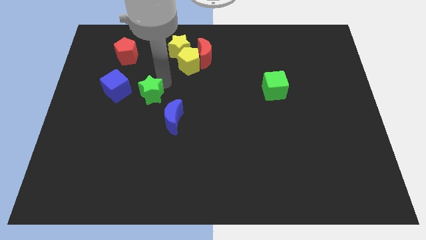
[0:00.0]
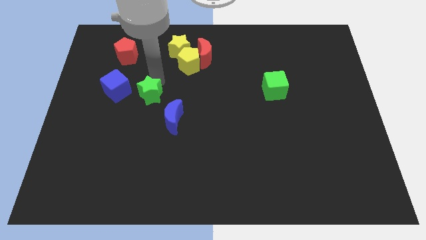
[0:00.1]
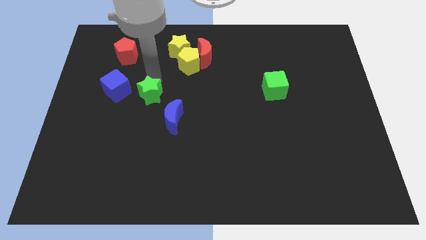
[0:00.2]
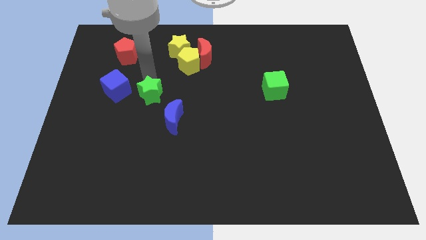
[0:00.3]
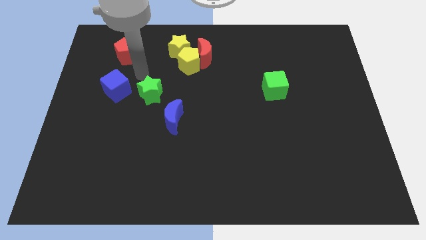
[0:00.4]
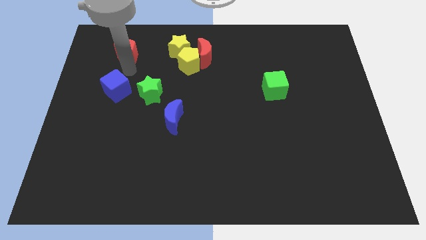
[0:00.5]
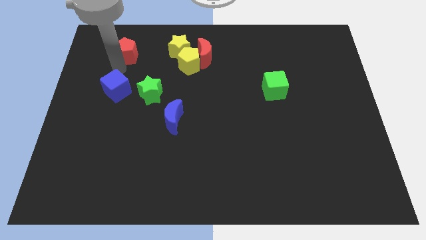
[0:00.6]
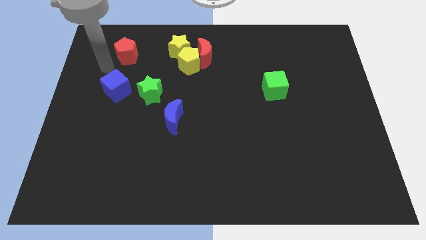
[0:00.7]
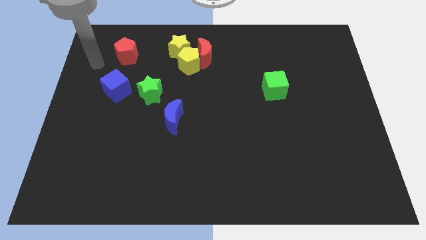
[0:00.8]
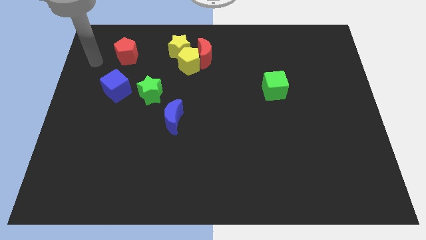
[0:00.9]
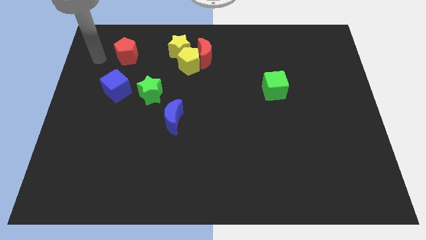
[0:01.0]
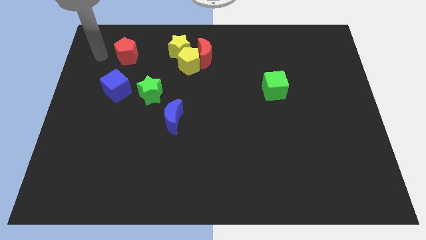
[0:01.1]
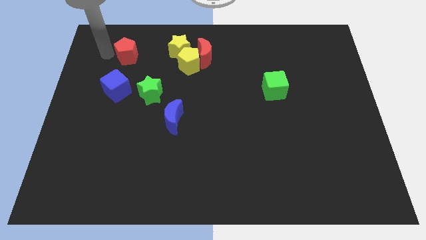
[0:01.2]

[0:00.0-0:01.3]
move your arm left to the red pentagon

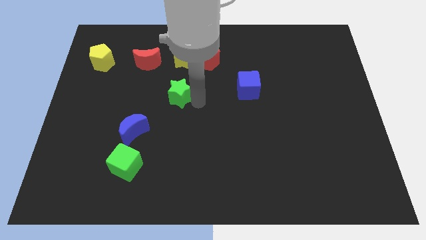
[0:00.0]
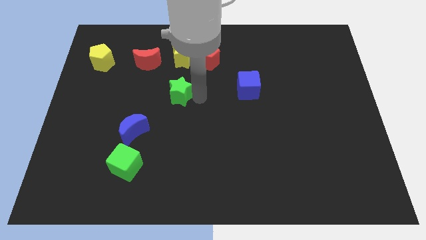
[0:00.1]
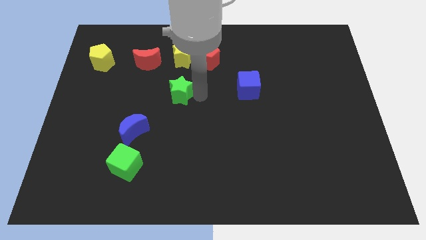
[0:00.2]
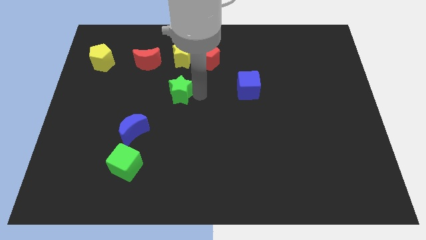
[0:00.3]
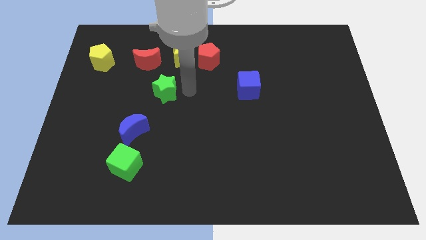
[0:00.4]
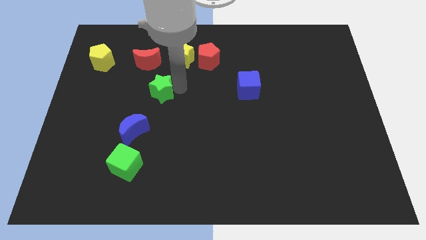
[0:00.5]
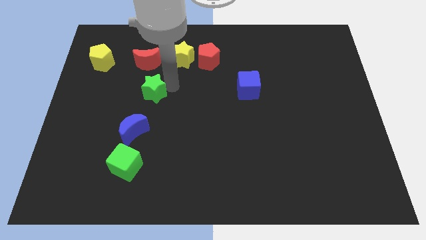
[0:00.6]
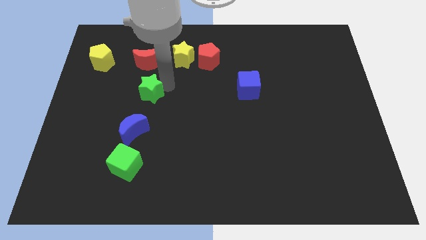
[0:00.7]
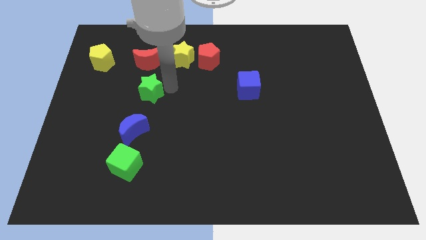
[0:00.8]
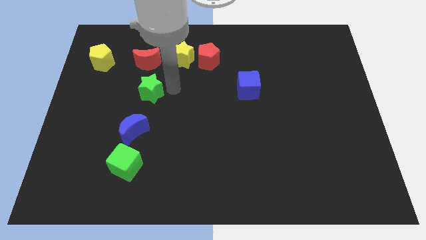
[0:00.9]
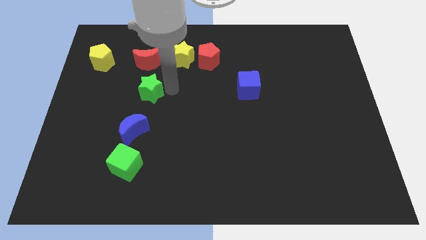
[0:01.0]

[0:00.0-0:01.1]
drag green star towards left side of the board

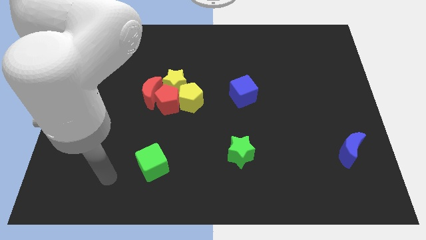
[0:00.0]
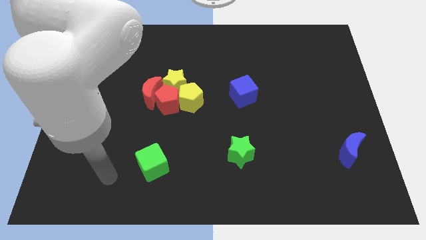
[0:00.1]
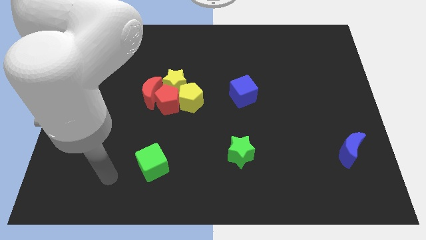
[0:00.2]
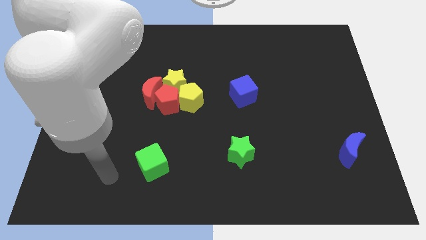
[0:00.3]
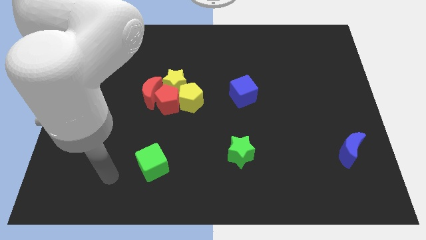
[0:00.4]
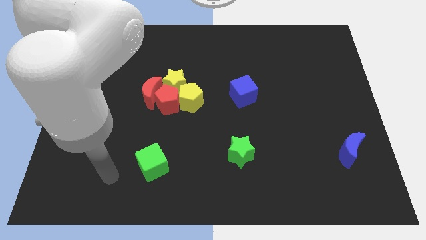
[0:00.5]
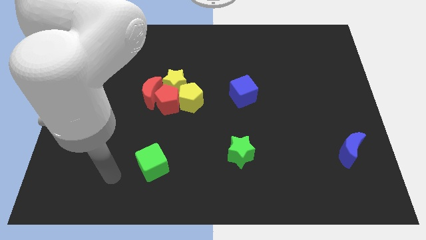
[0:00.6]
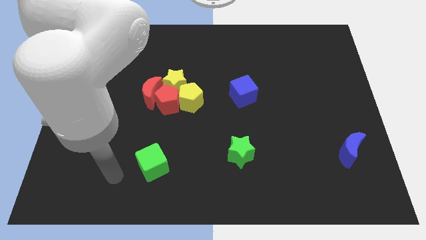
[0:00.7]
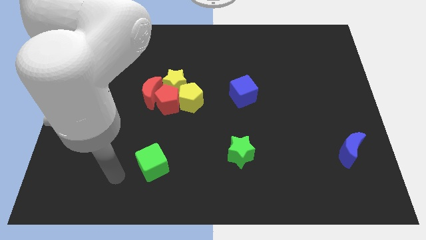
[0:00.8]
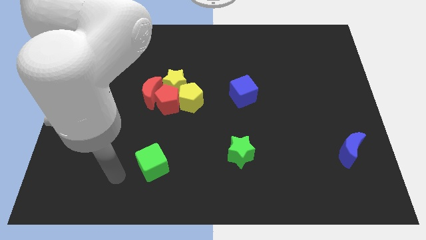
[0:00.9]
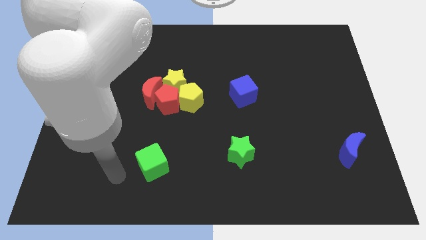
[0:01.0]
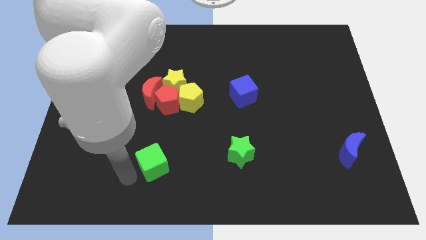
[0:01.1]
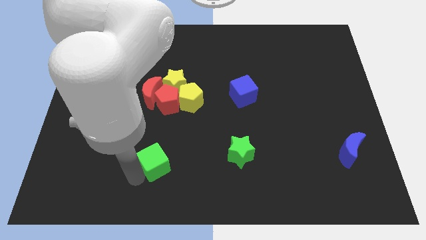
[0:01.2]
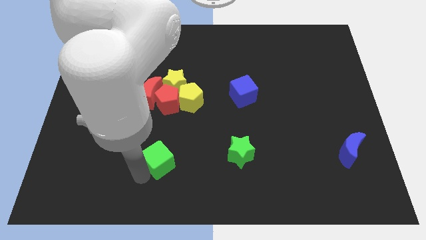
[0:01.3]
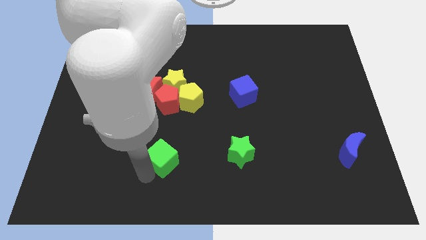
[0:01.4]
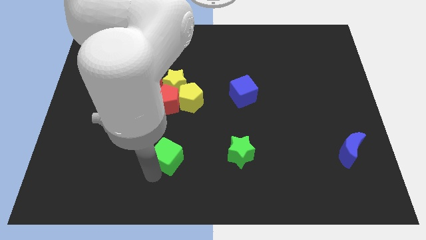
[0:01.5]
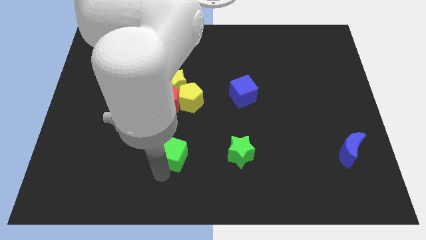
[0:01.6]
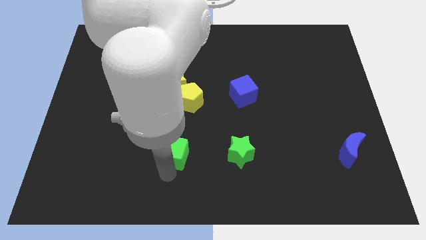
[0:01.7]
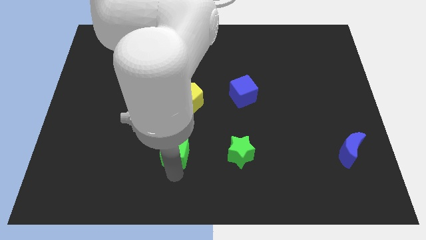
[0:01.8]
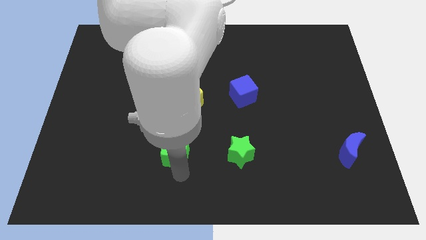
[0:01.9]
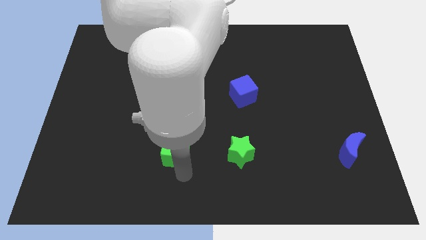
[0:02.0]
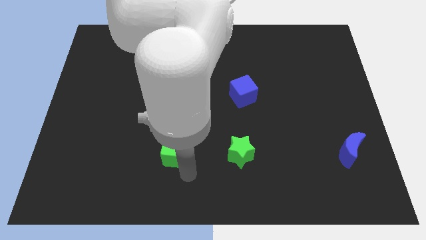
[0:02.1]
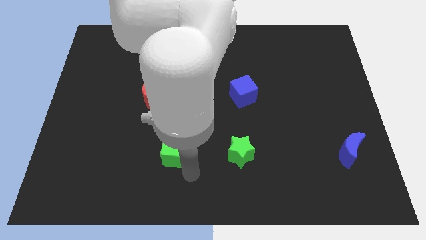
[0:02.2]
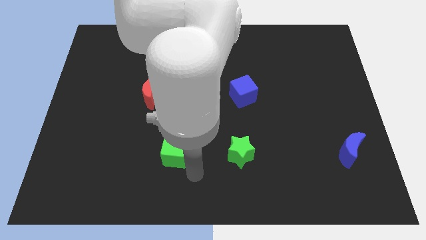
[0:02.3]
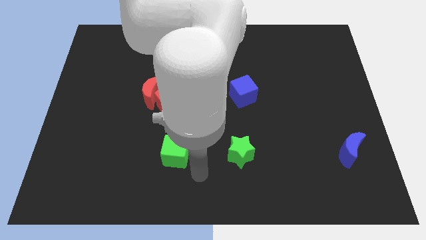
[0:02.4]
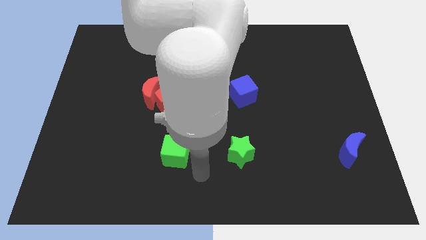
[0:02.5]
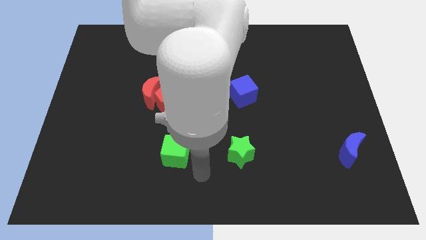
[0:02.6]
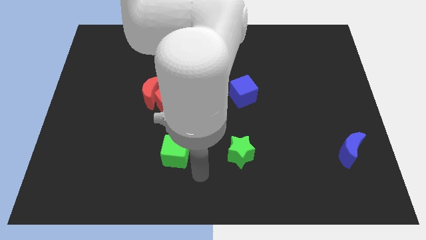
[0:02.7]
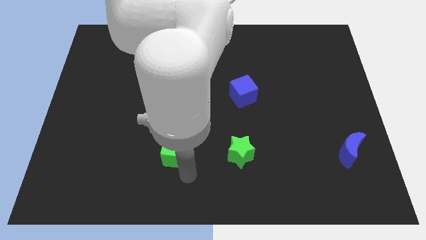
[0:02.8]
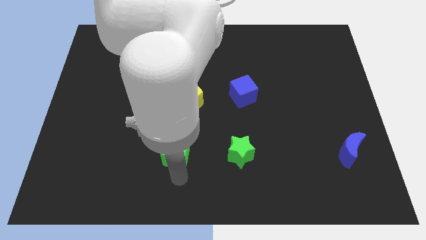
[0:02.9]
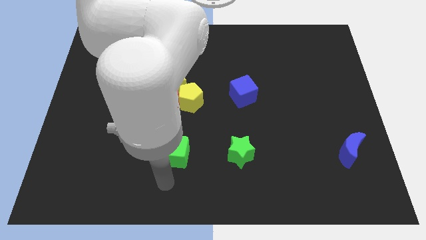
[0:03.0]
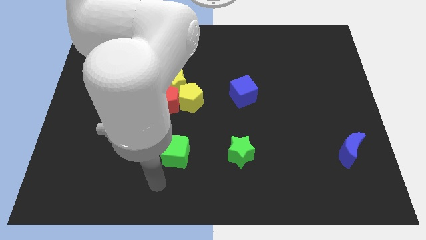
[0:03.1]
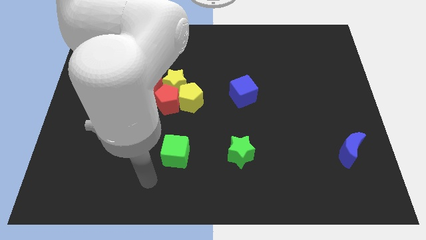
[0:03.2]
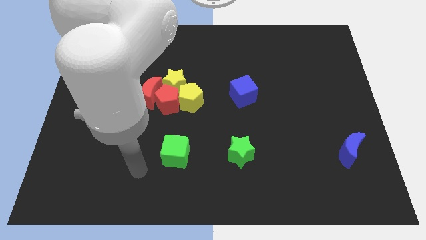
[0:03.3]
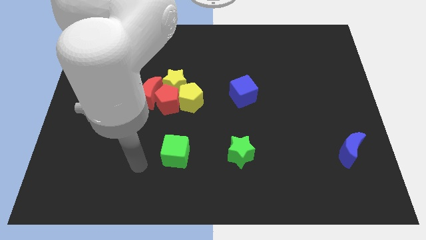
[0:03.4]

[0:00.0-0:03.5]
move the green cube diagonal to the left of the green star

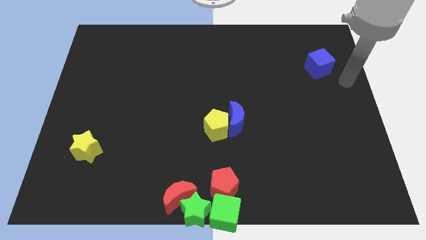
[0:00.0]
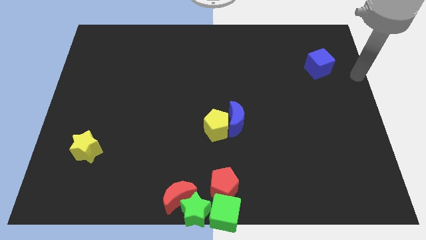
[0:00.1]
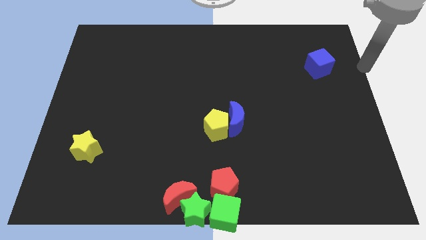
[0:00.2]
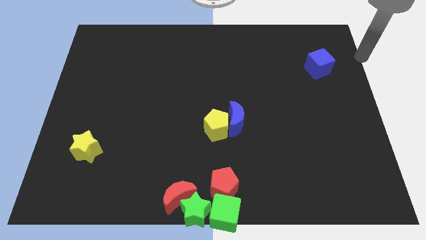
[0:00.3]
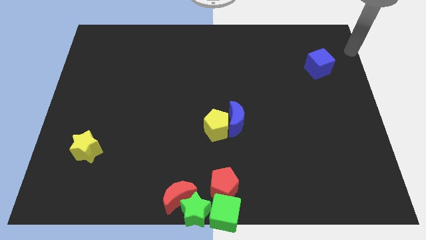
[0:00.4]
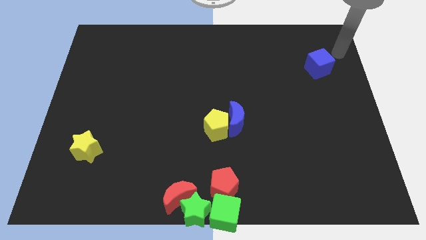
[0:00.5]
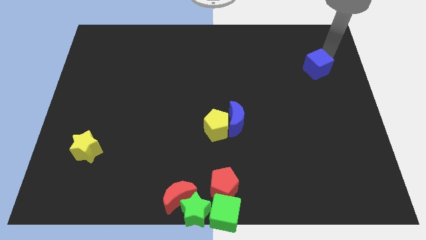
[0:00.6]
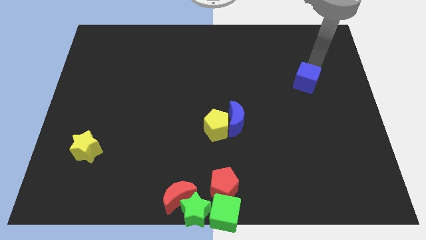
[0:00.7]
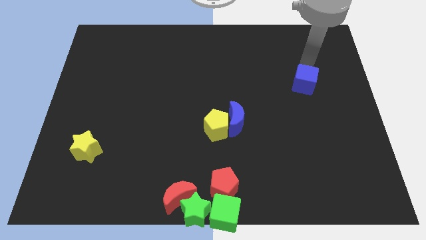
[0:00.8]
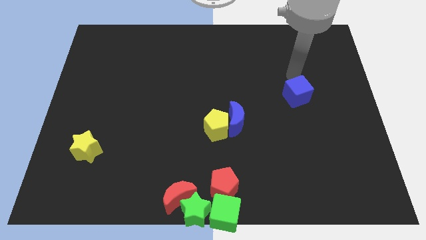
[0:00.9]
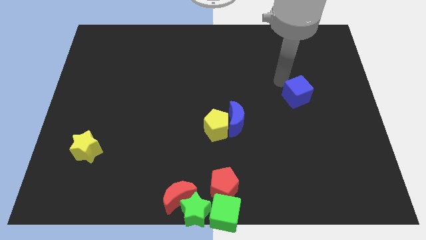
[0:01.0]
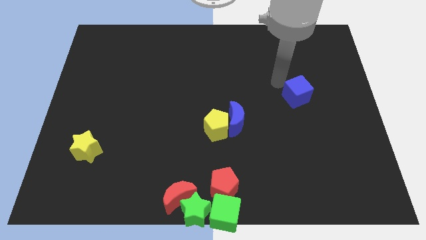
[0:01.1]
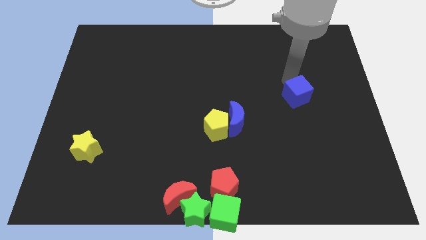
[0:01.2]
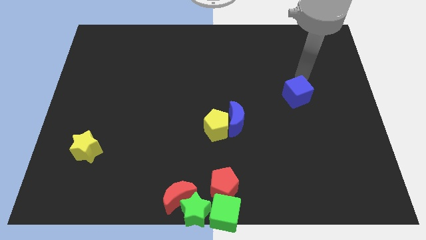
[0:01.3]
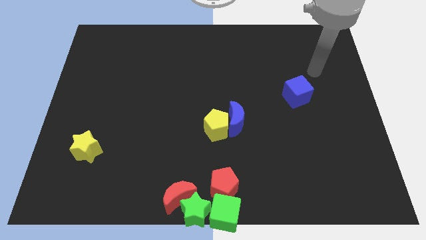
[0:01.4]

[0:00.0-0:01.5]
slightly push the blue cube towards down

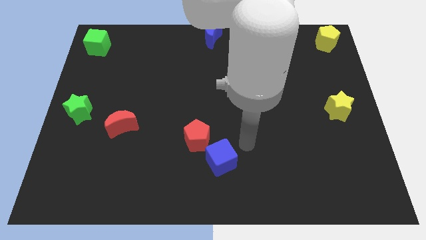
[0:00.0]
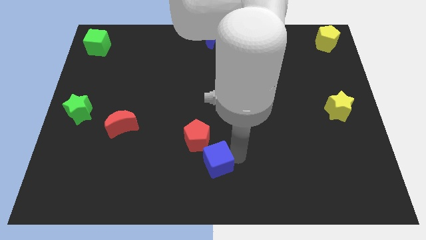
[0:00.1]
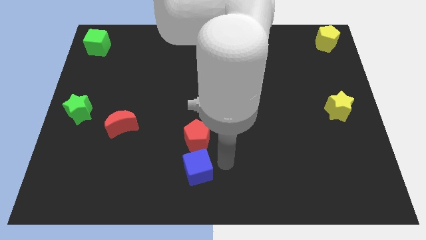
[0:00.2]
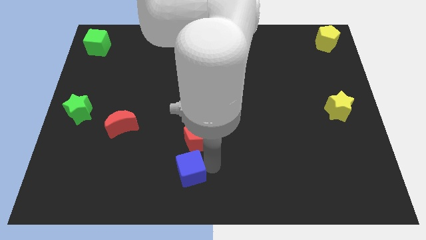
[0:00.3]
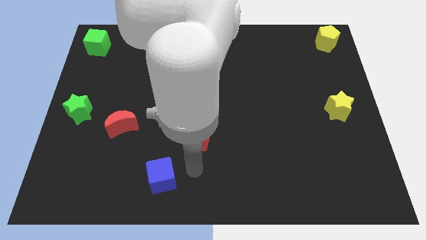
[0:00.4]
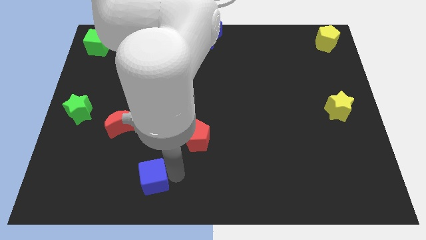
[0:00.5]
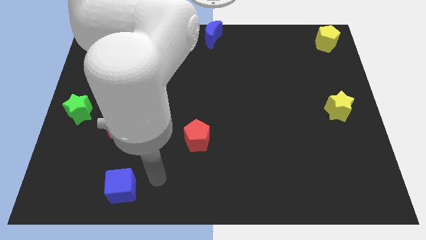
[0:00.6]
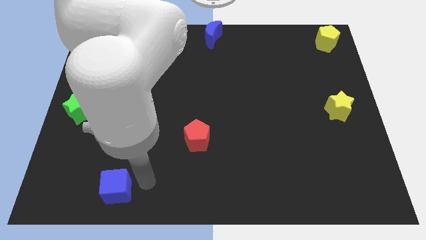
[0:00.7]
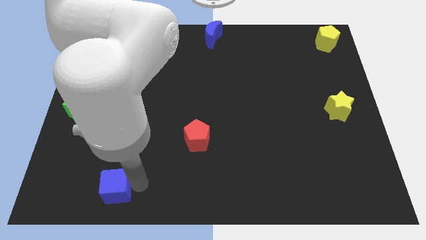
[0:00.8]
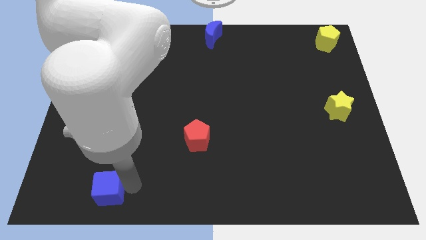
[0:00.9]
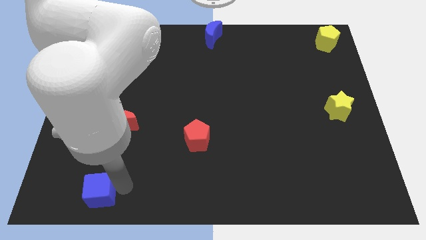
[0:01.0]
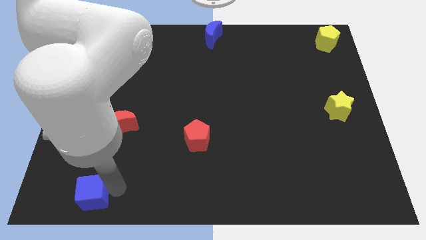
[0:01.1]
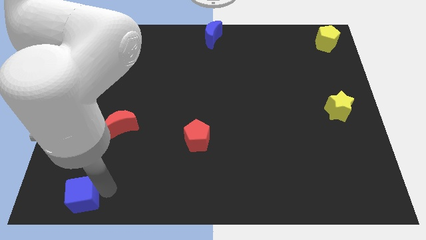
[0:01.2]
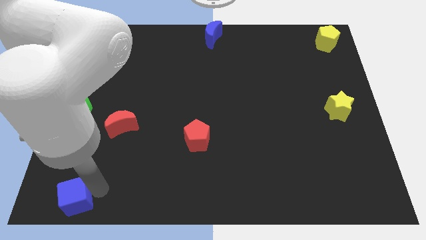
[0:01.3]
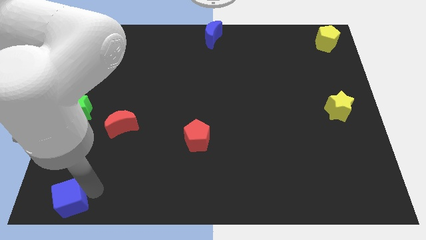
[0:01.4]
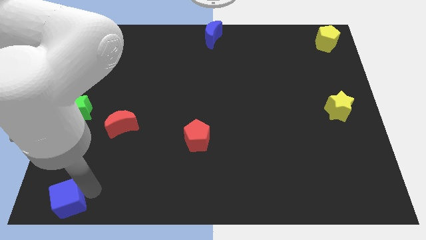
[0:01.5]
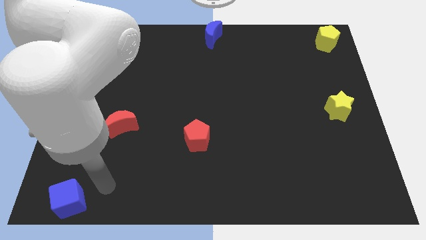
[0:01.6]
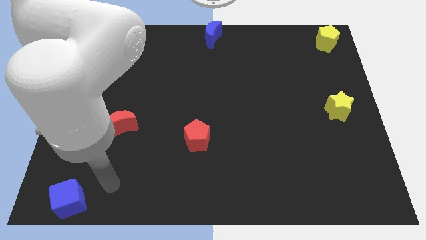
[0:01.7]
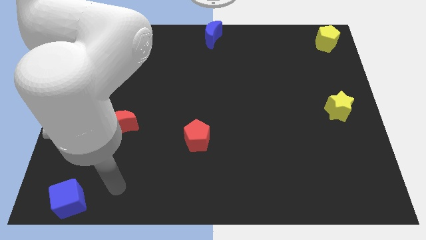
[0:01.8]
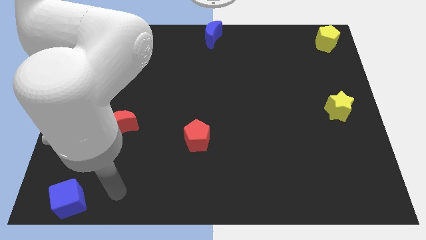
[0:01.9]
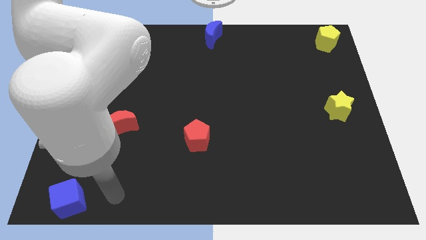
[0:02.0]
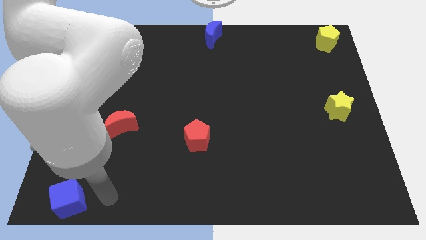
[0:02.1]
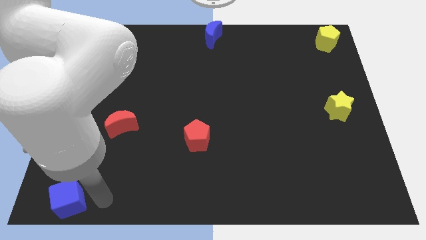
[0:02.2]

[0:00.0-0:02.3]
move the blue cube a part from the red pentagon
